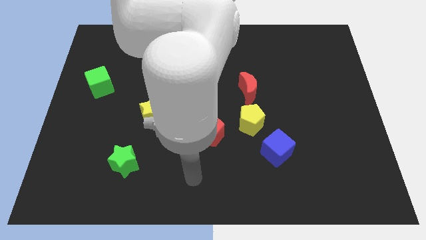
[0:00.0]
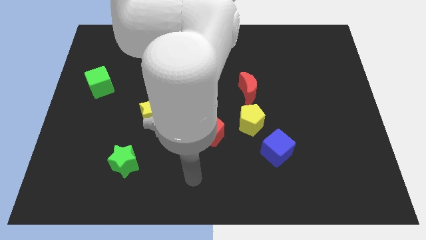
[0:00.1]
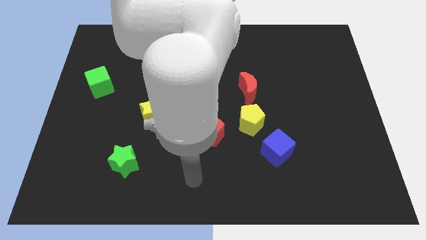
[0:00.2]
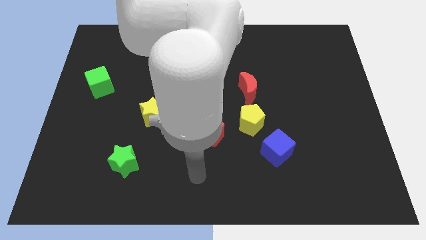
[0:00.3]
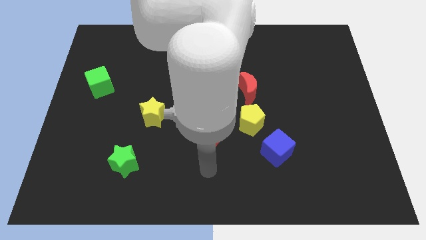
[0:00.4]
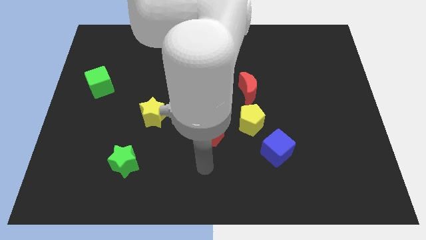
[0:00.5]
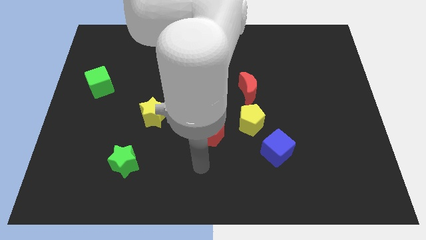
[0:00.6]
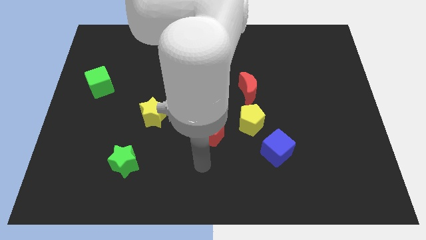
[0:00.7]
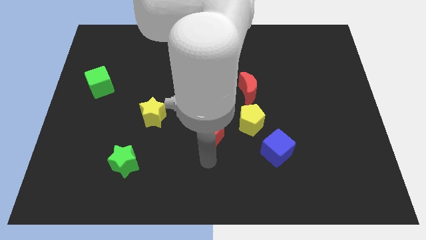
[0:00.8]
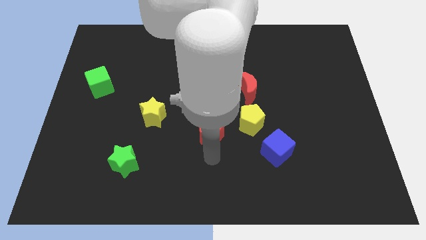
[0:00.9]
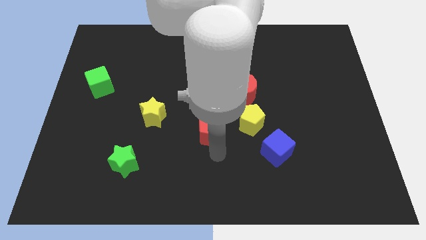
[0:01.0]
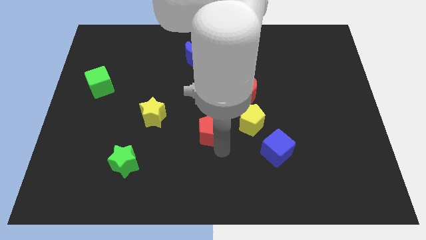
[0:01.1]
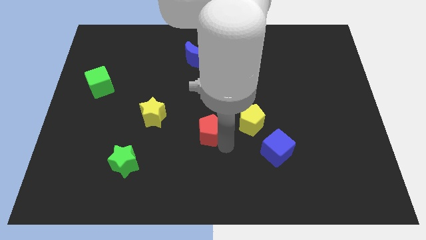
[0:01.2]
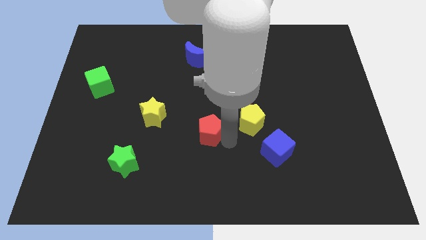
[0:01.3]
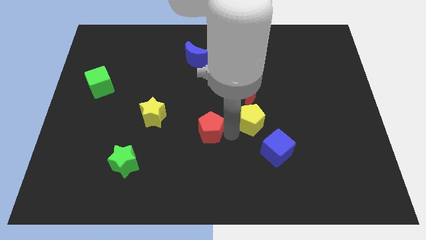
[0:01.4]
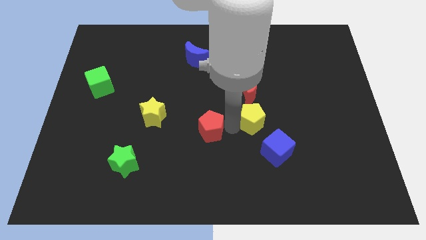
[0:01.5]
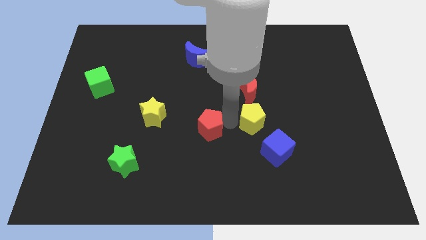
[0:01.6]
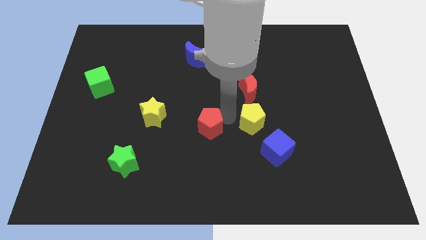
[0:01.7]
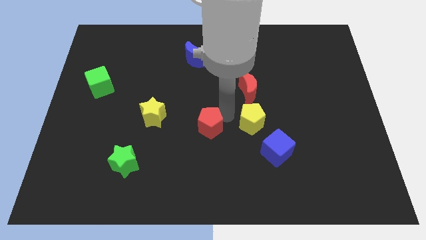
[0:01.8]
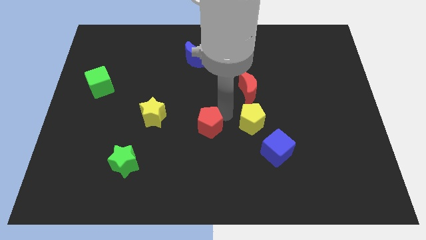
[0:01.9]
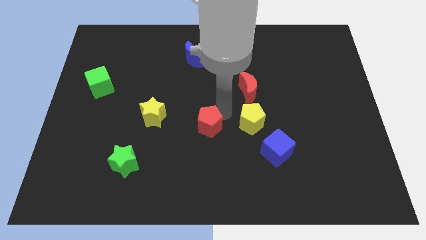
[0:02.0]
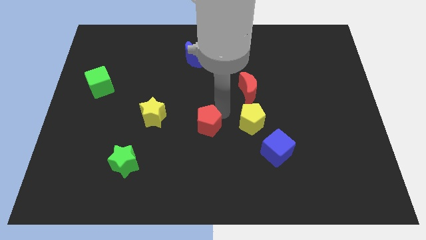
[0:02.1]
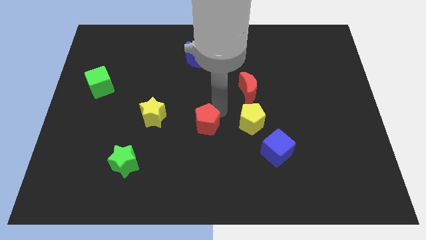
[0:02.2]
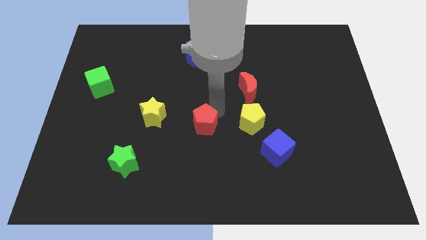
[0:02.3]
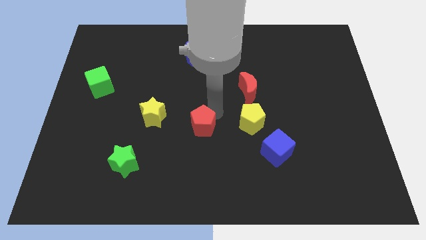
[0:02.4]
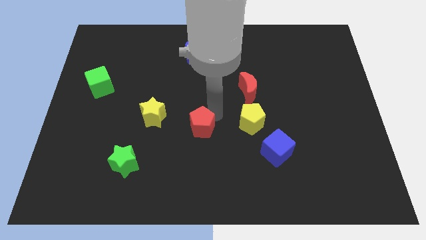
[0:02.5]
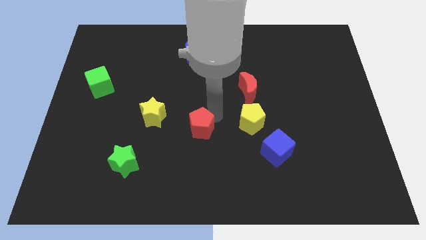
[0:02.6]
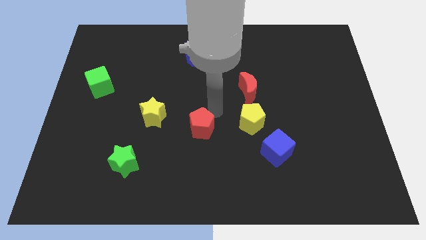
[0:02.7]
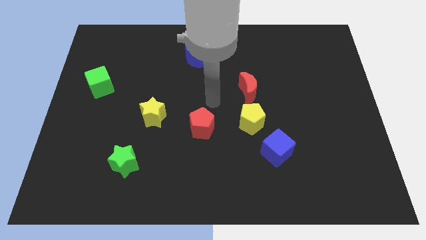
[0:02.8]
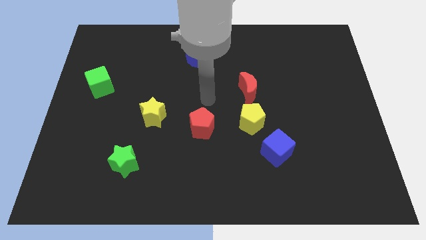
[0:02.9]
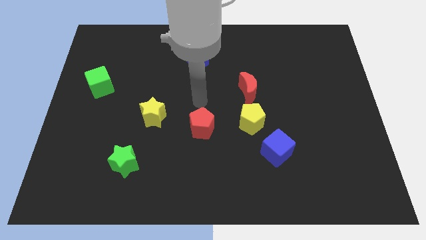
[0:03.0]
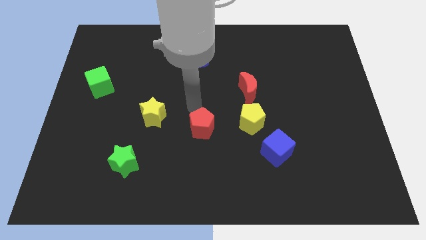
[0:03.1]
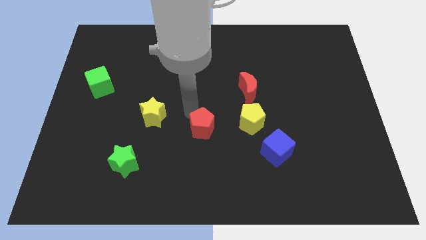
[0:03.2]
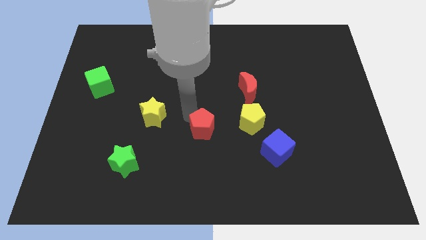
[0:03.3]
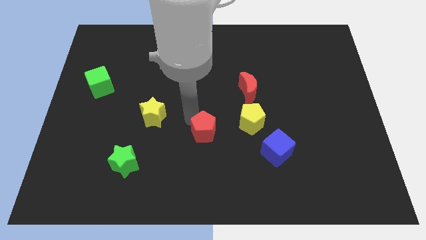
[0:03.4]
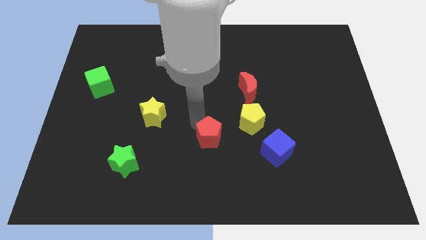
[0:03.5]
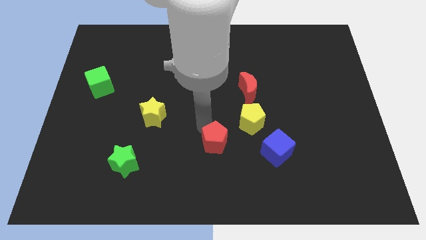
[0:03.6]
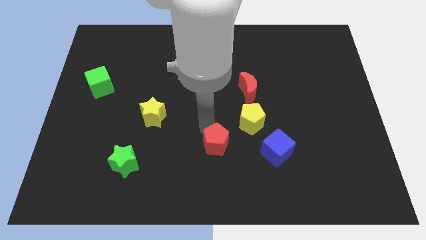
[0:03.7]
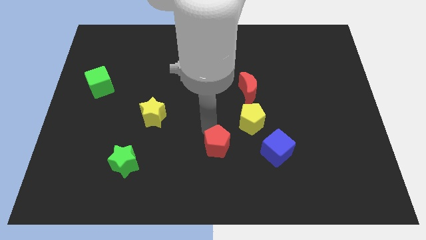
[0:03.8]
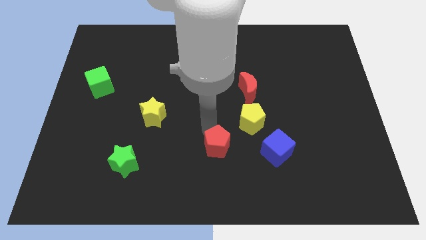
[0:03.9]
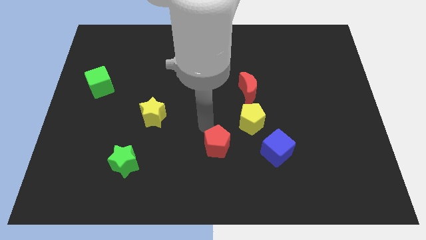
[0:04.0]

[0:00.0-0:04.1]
place the red pentagon to the left of blue cube

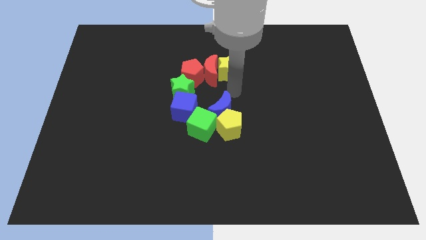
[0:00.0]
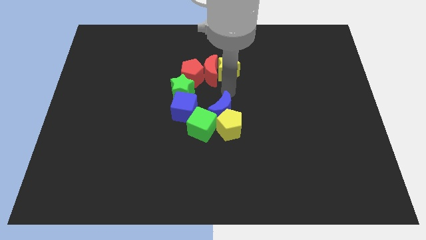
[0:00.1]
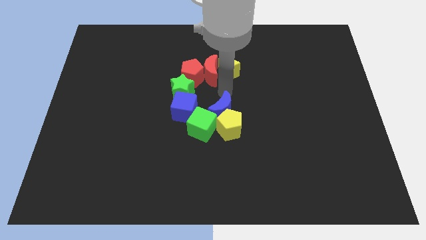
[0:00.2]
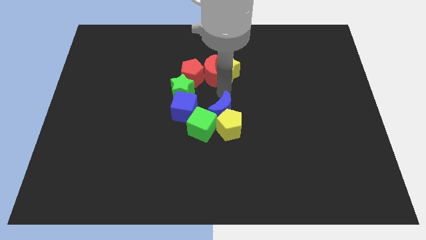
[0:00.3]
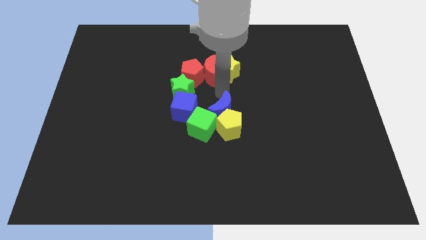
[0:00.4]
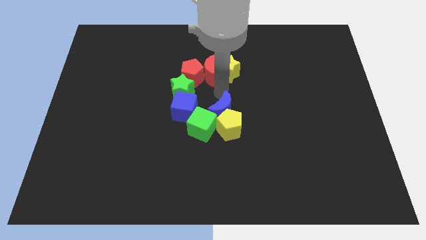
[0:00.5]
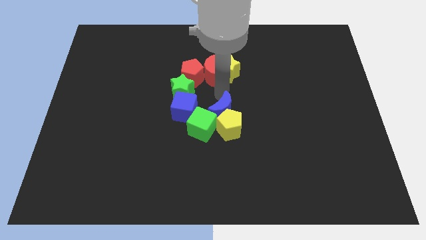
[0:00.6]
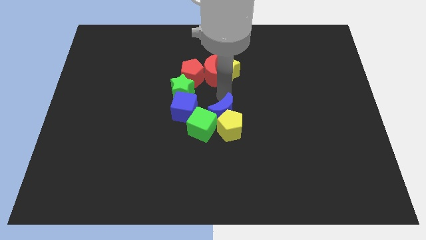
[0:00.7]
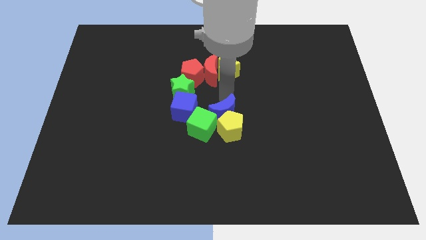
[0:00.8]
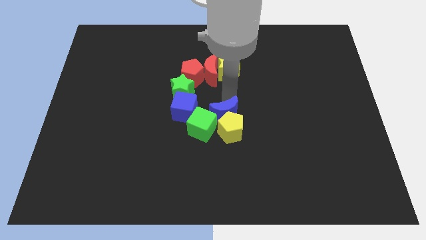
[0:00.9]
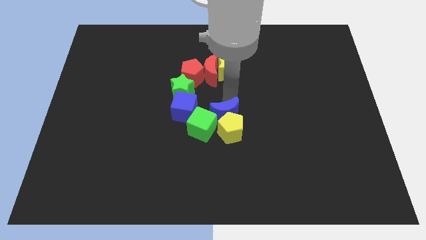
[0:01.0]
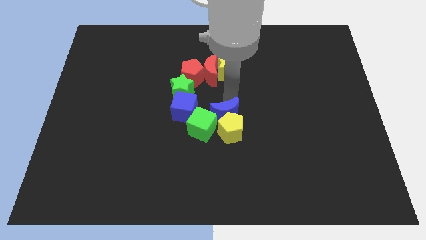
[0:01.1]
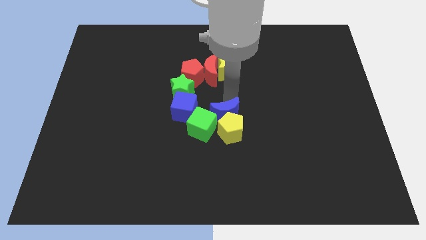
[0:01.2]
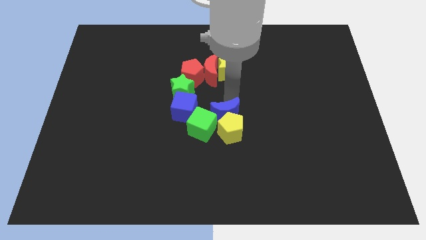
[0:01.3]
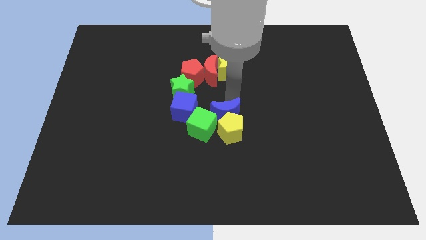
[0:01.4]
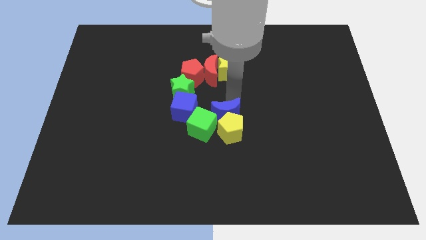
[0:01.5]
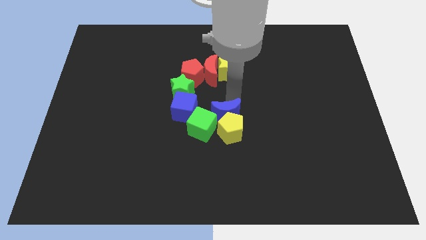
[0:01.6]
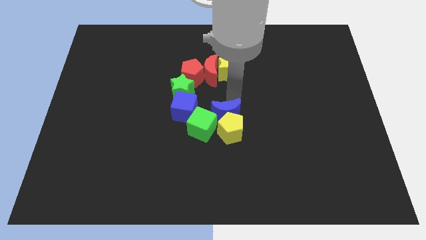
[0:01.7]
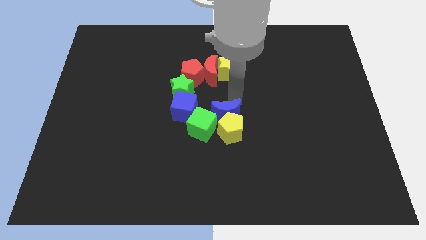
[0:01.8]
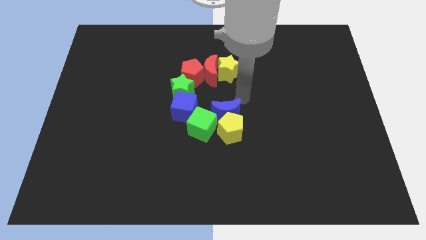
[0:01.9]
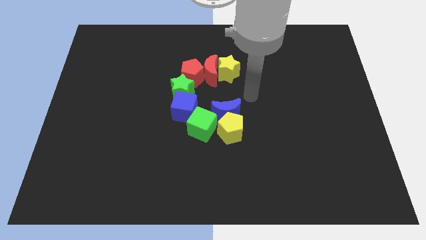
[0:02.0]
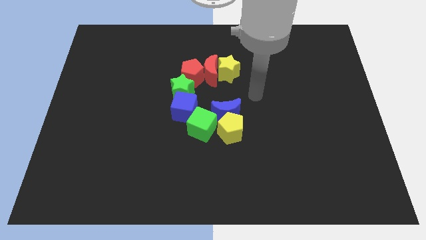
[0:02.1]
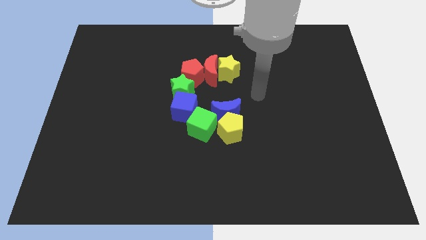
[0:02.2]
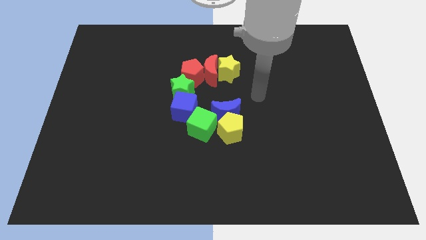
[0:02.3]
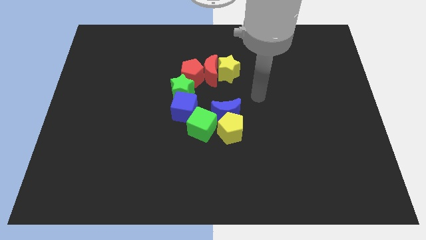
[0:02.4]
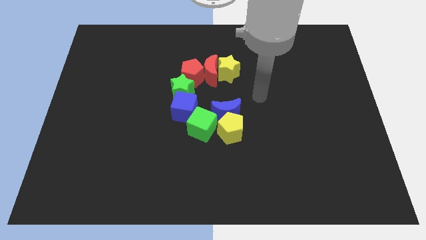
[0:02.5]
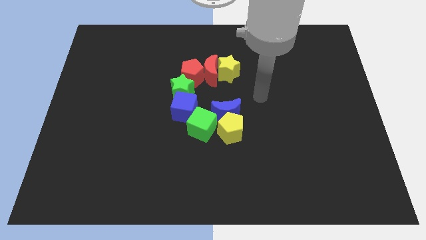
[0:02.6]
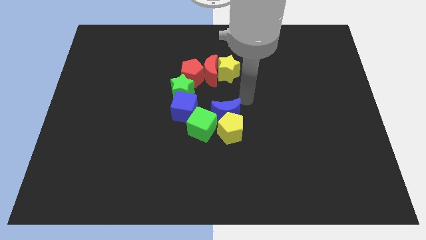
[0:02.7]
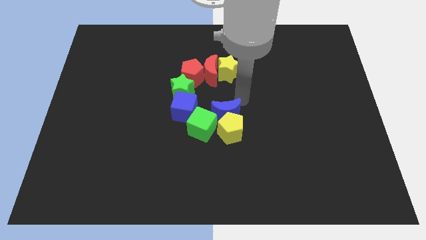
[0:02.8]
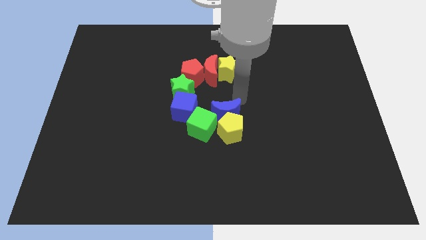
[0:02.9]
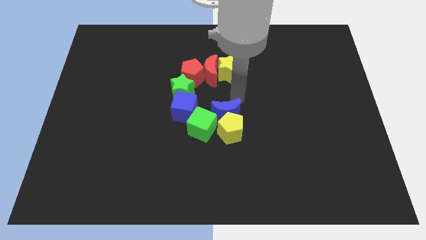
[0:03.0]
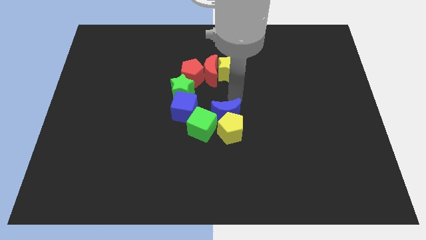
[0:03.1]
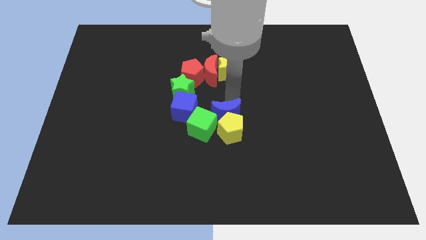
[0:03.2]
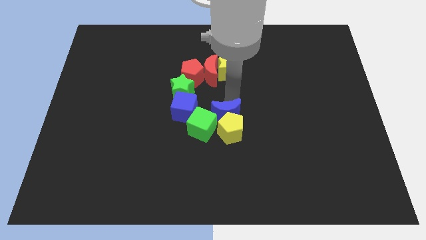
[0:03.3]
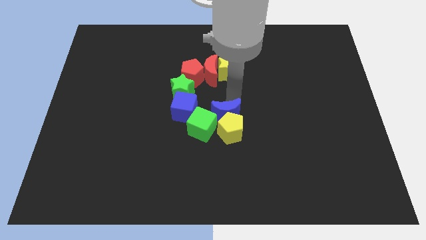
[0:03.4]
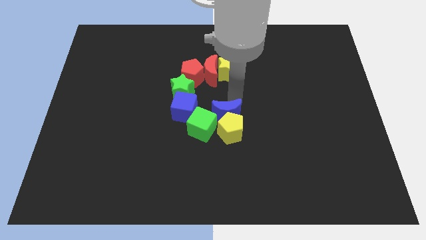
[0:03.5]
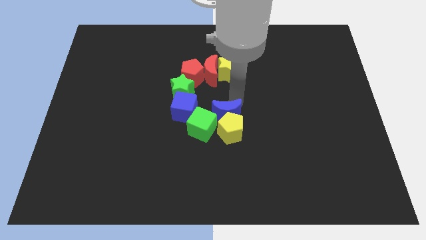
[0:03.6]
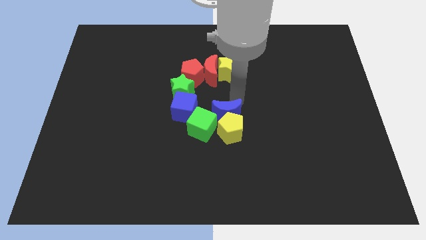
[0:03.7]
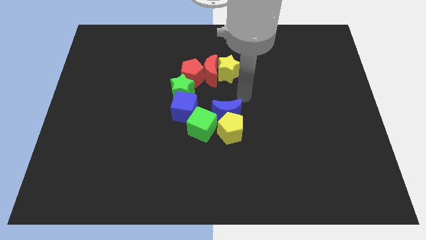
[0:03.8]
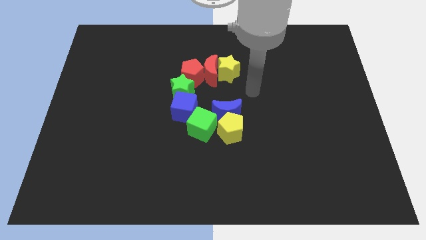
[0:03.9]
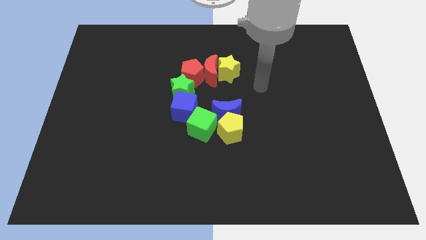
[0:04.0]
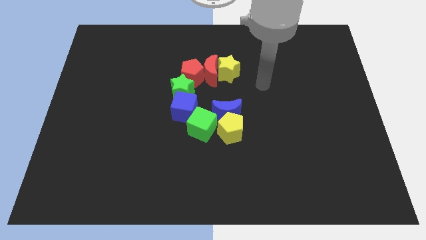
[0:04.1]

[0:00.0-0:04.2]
adjust the blue crescent at the center of the board

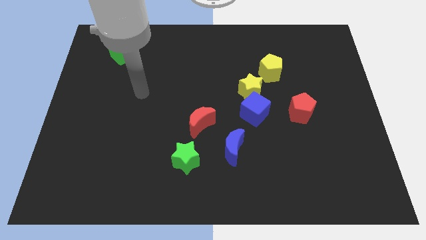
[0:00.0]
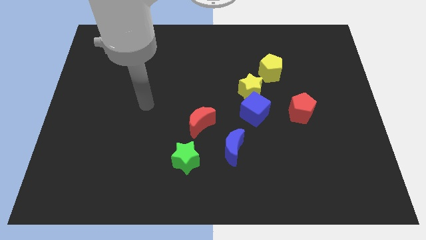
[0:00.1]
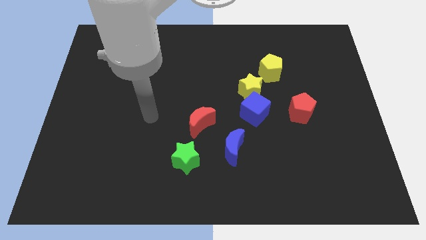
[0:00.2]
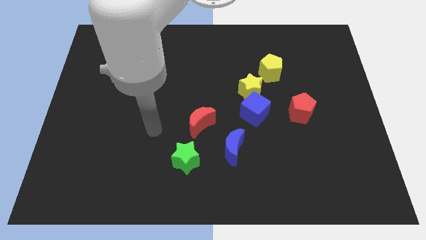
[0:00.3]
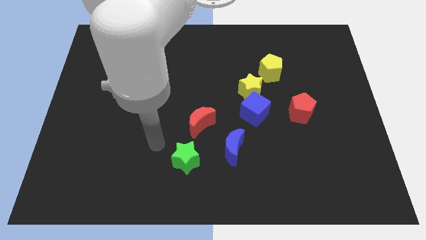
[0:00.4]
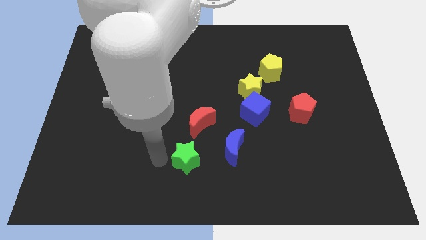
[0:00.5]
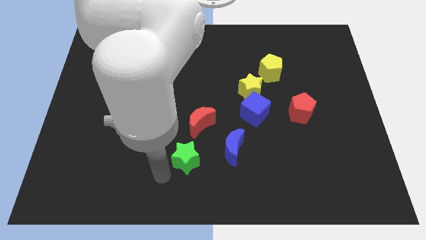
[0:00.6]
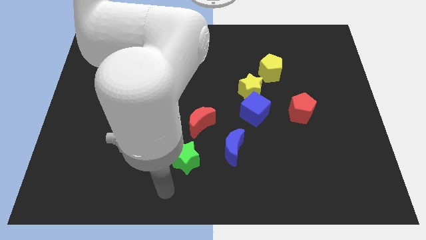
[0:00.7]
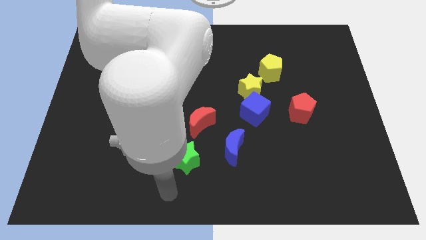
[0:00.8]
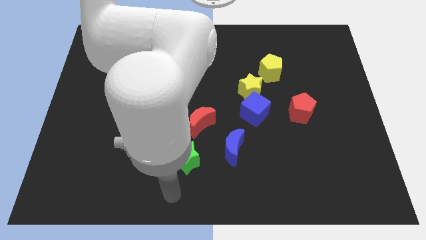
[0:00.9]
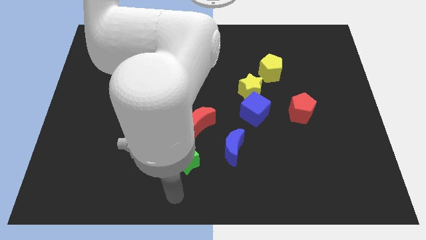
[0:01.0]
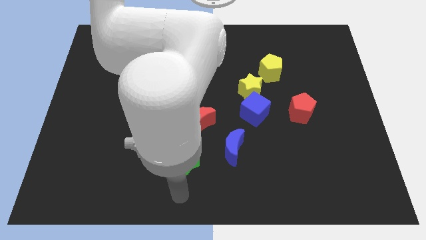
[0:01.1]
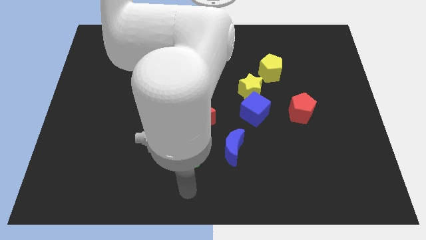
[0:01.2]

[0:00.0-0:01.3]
point your arm at the bottom side of the green star
